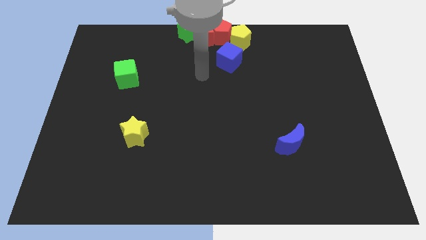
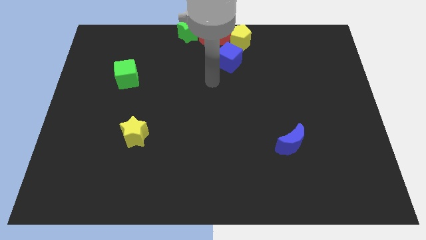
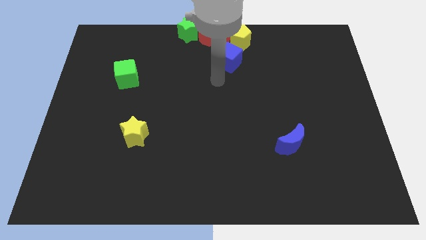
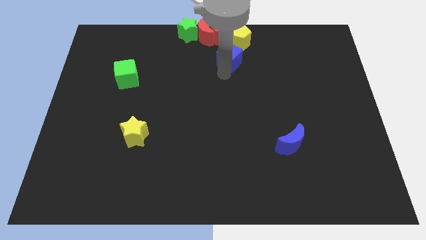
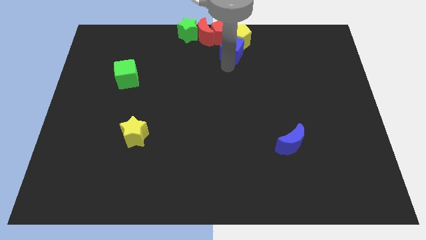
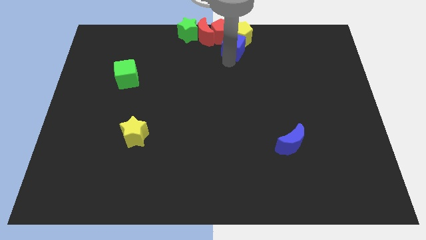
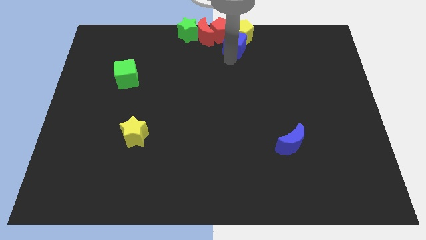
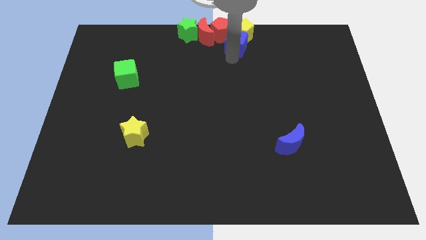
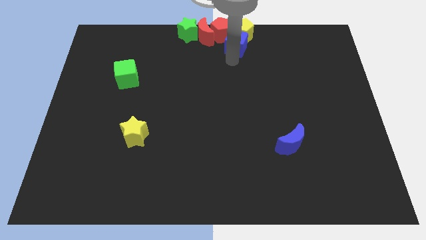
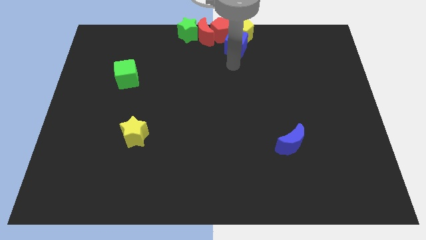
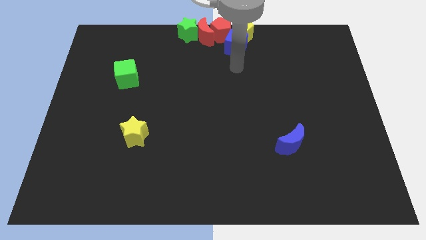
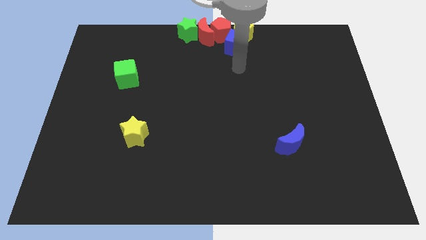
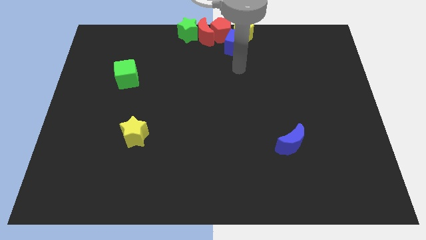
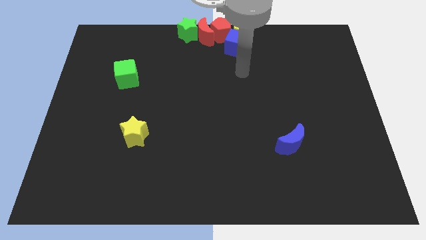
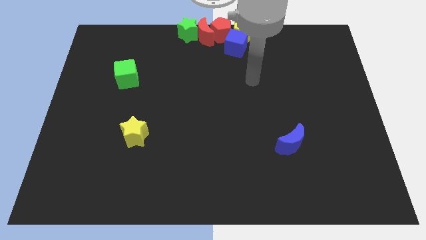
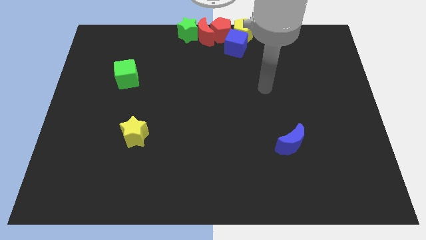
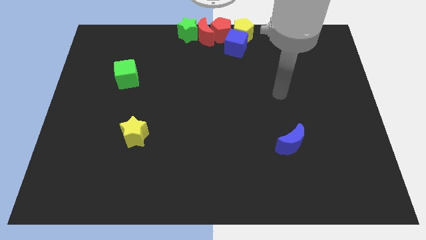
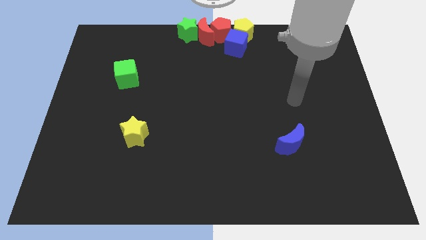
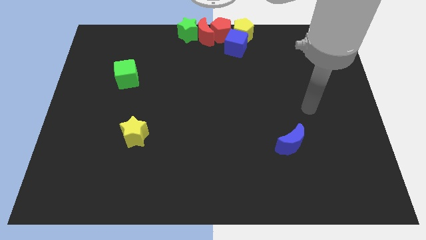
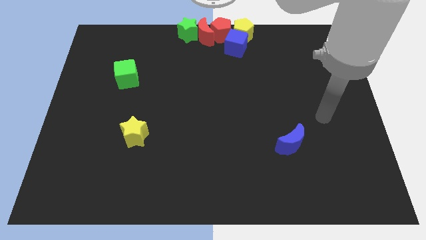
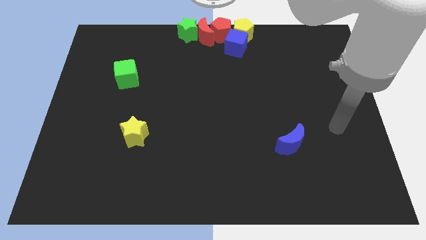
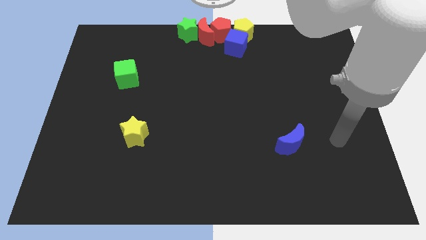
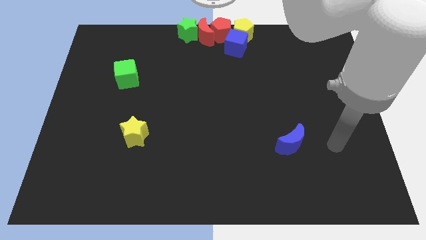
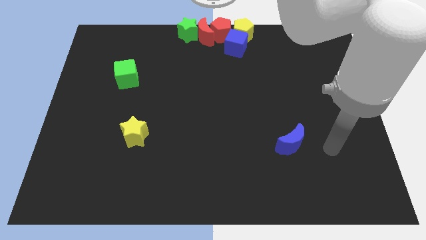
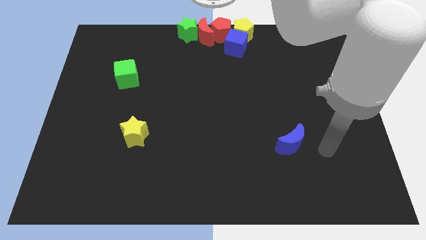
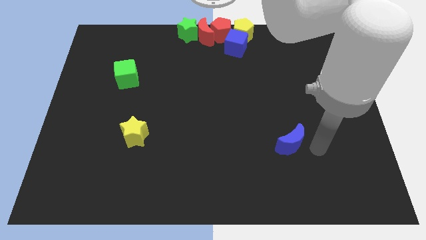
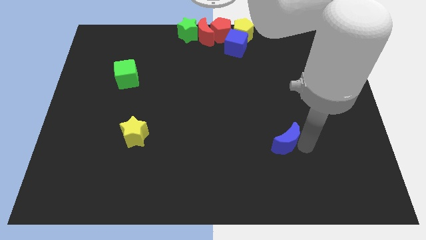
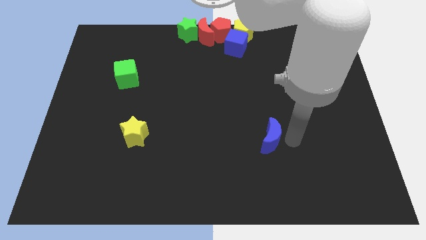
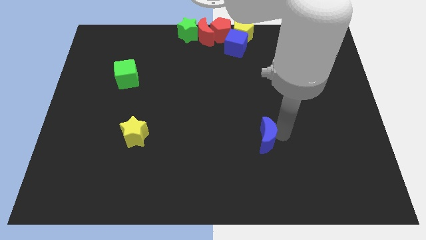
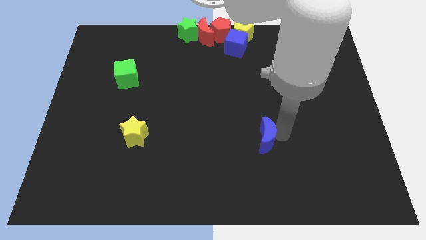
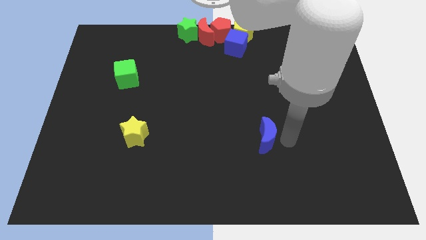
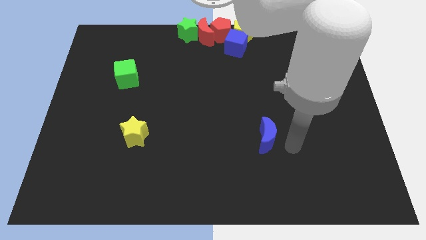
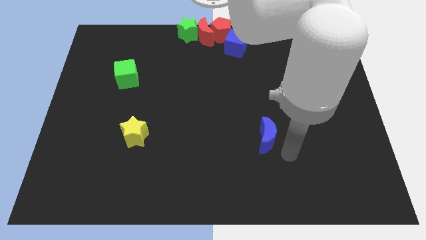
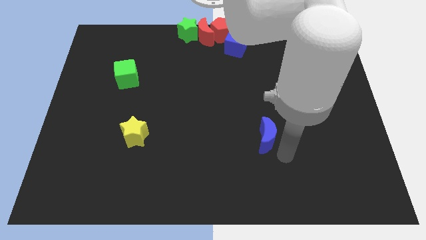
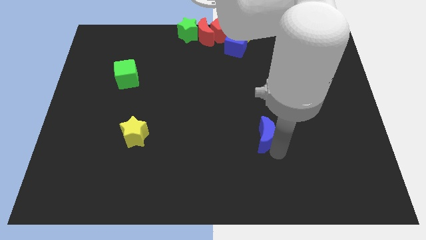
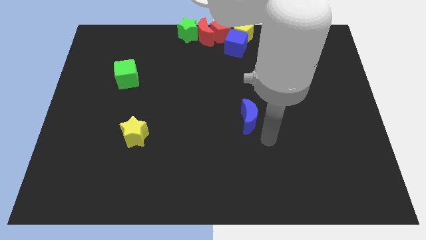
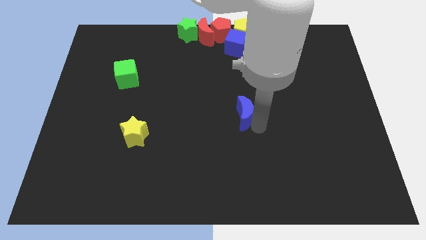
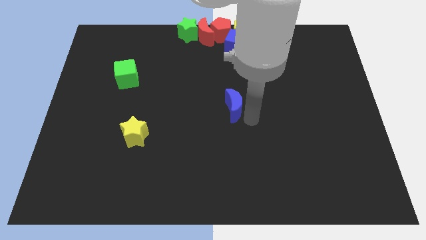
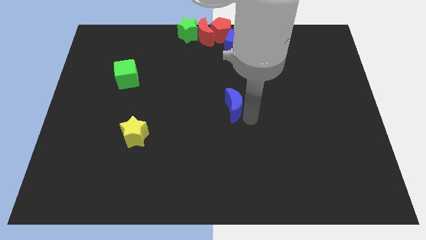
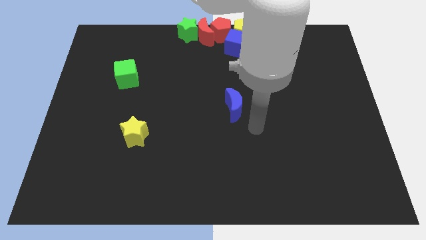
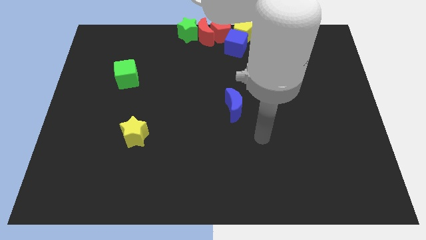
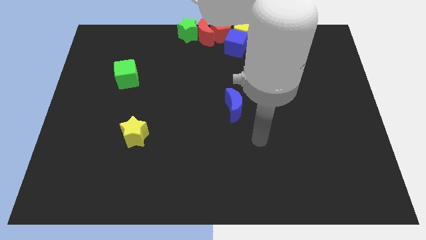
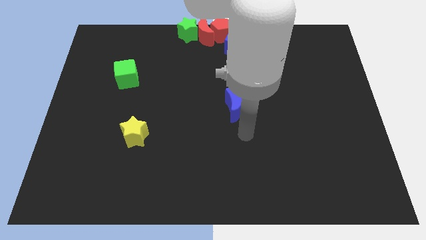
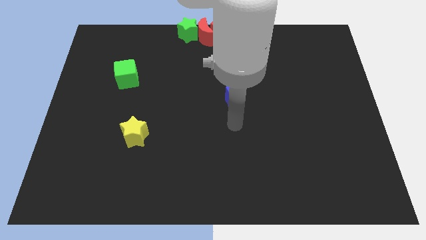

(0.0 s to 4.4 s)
place the blue moon at the center

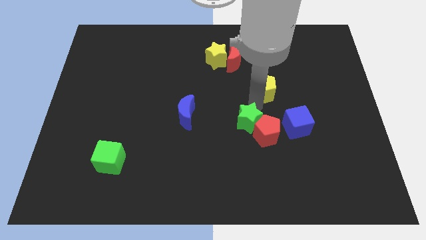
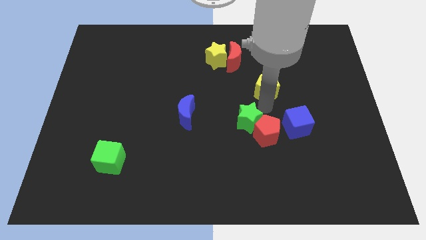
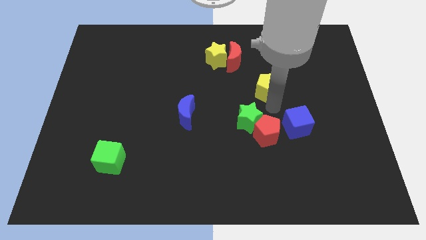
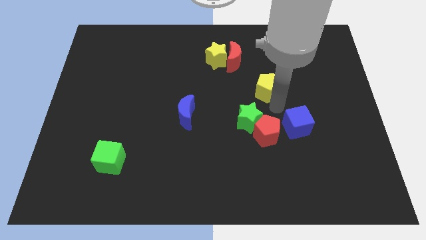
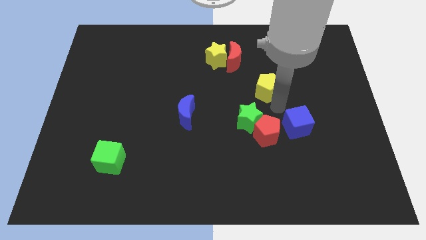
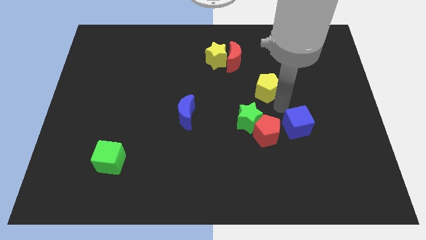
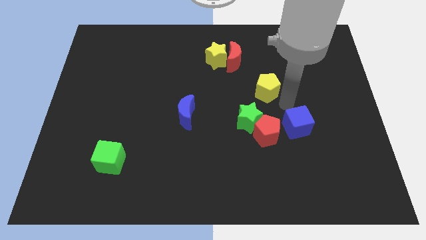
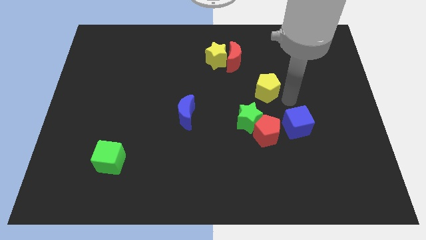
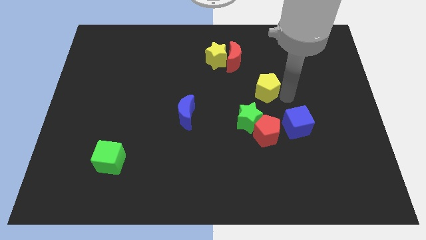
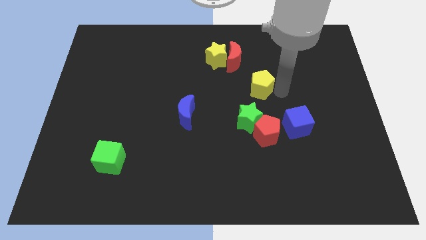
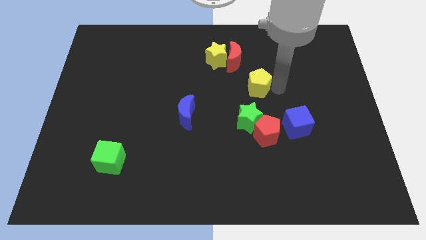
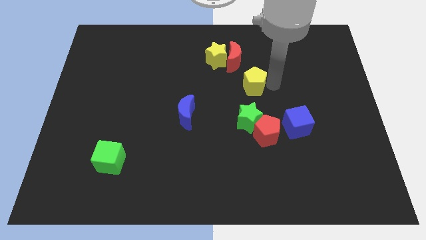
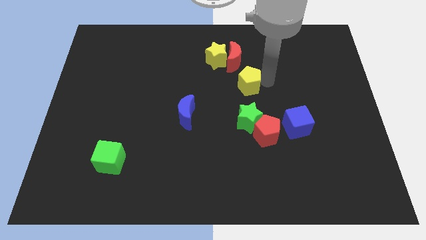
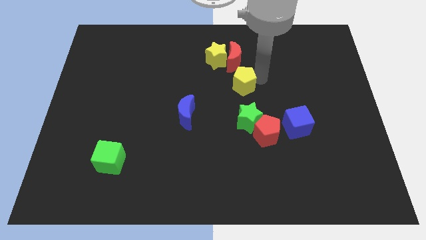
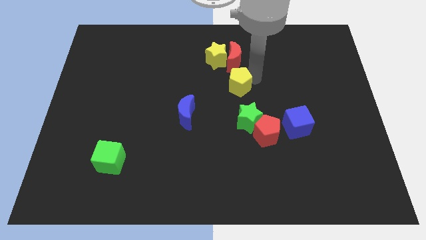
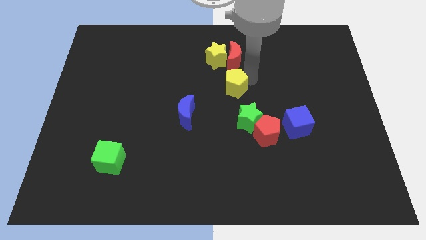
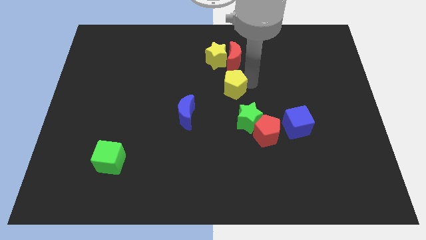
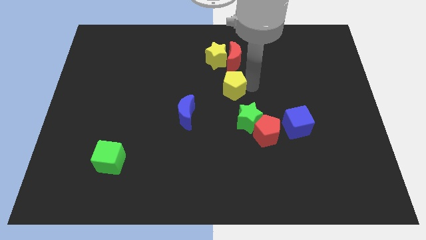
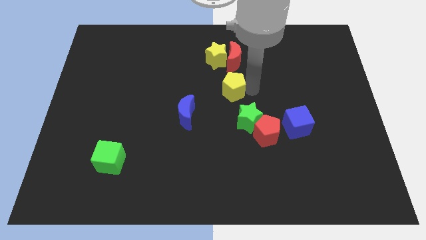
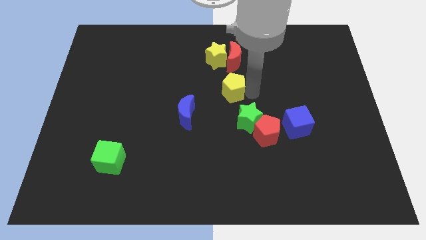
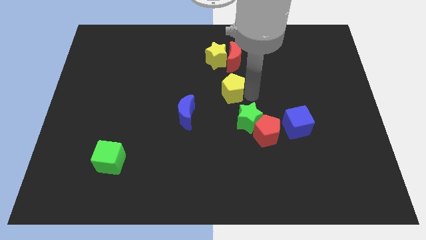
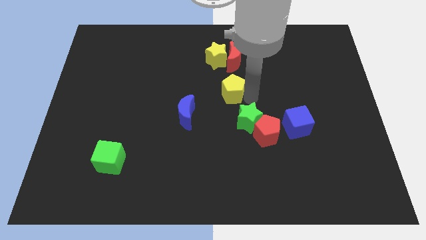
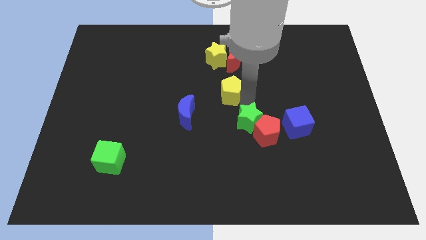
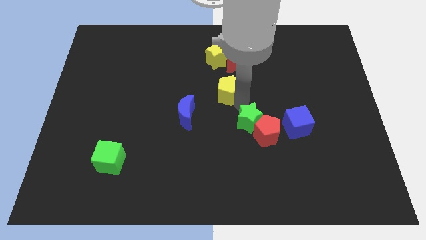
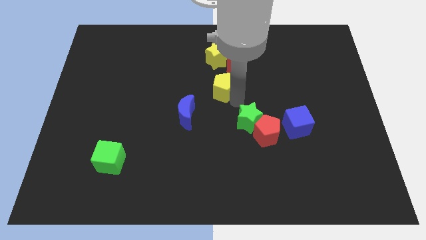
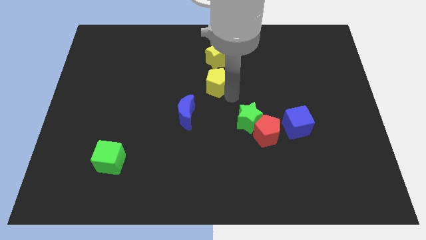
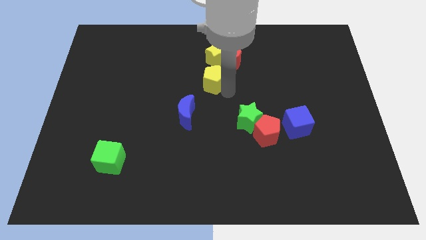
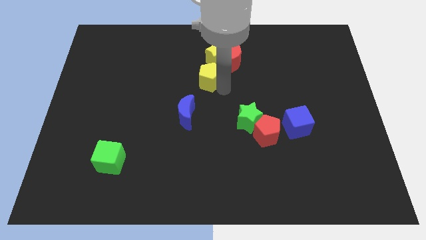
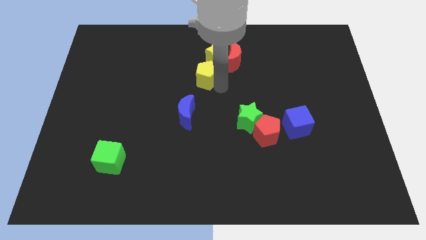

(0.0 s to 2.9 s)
push the yellow pentagon under the yellow star

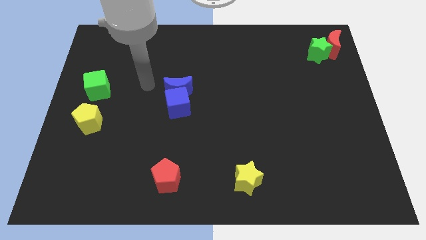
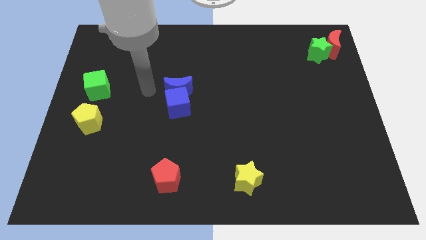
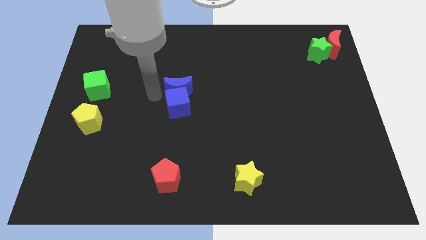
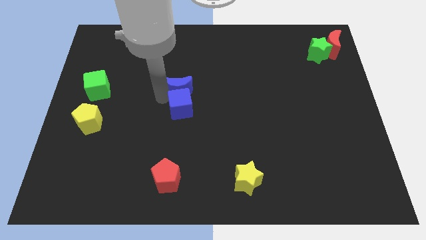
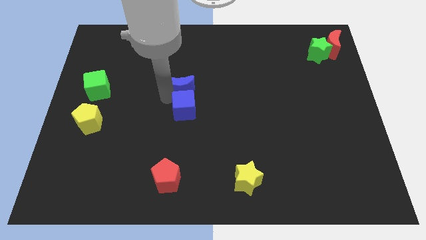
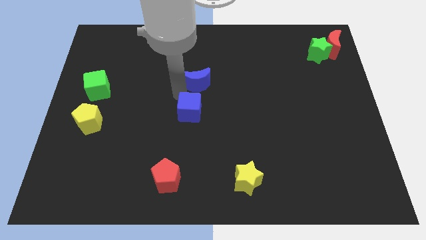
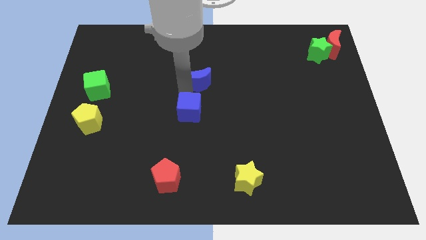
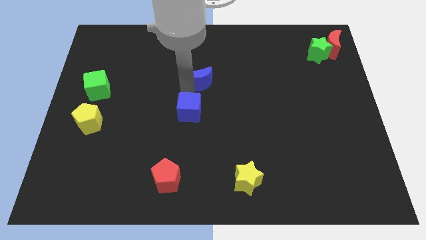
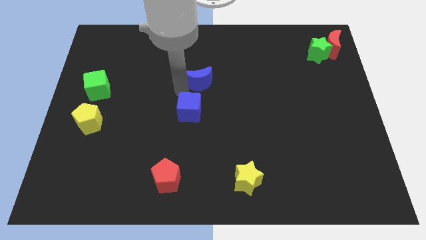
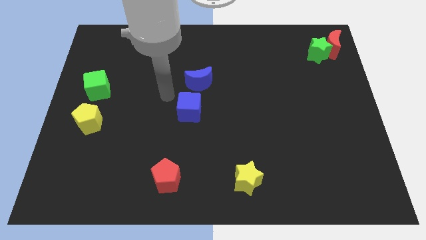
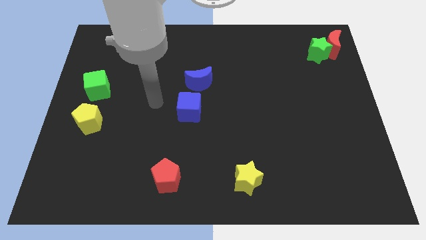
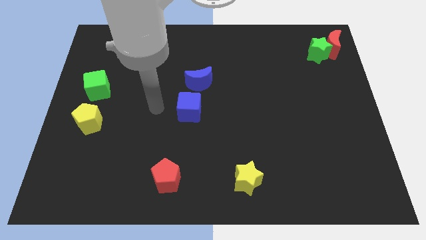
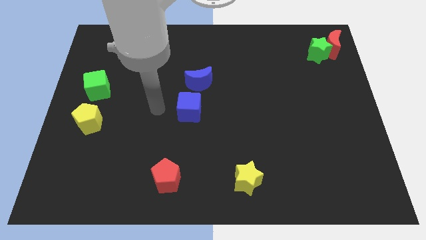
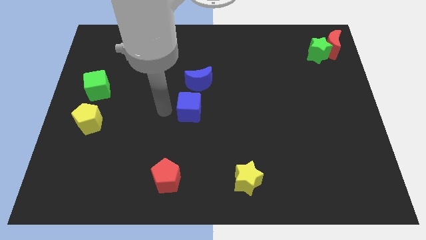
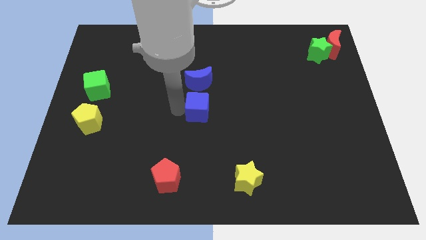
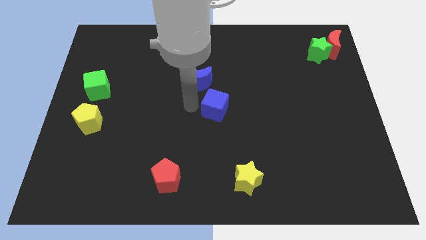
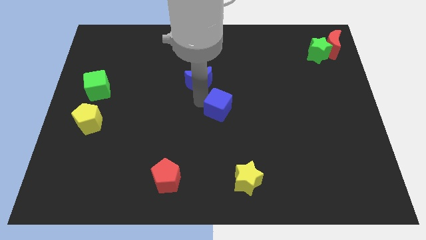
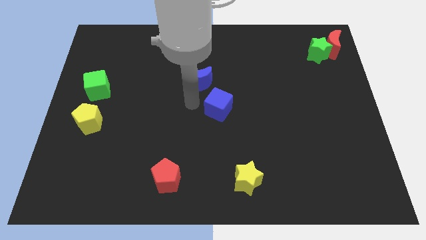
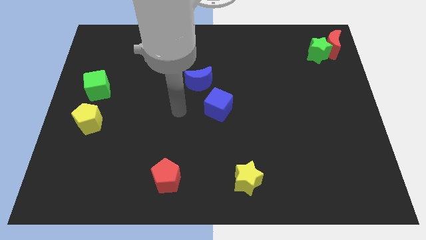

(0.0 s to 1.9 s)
place blue cube to the center of the board
